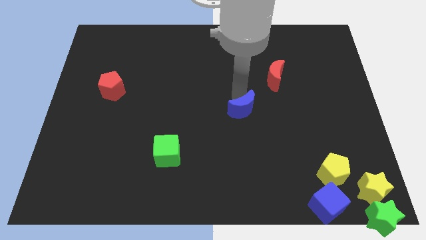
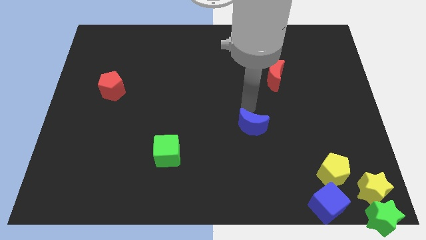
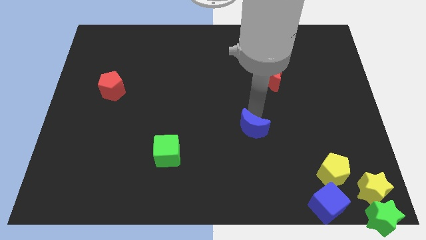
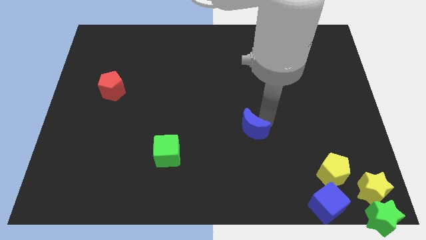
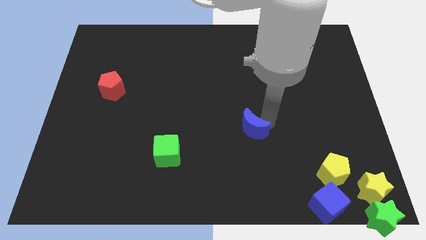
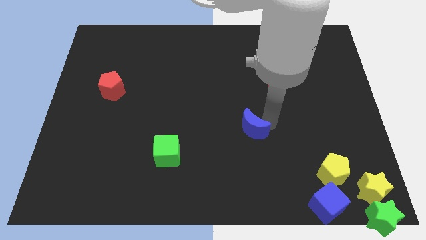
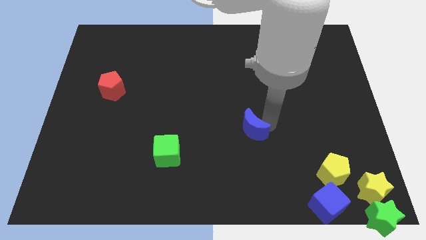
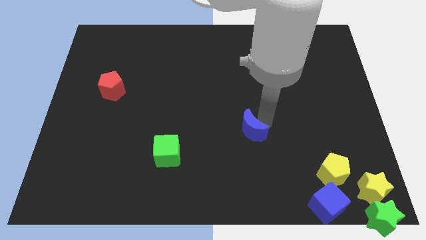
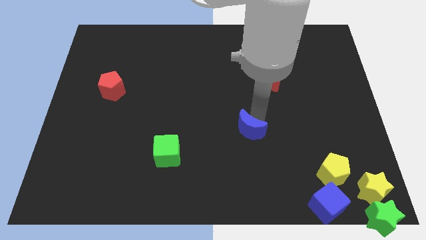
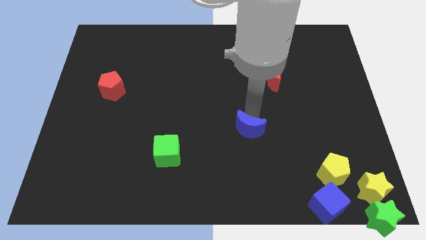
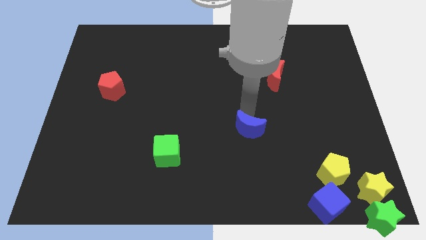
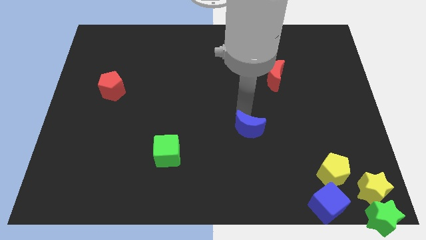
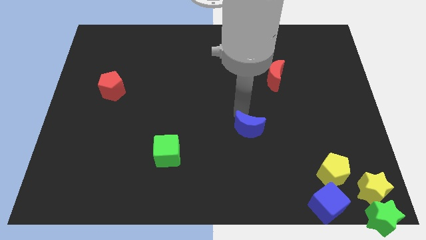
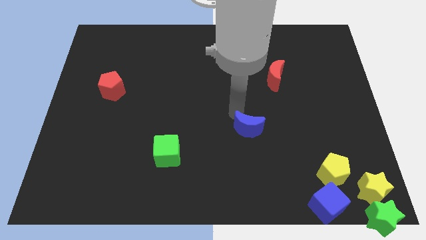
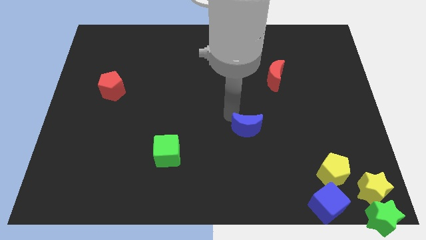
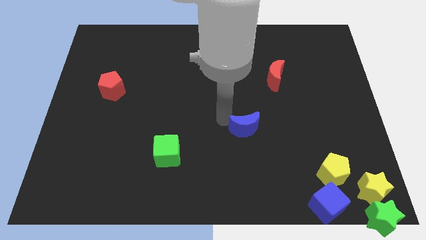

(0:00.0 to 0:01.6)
push blue crescent downwards

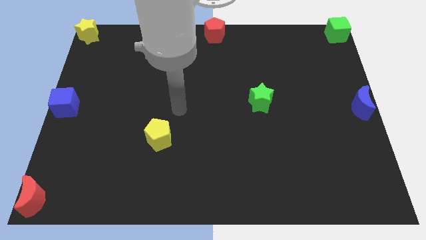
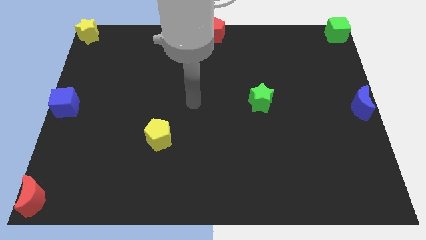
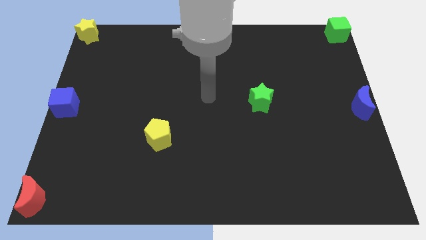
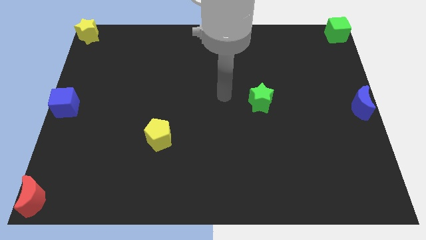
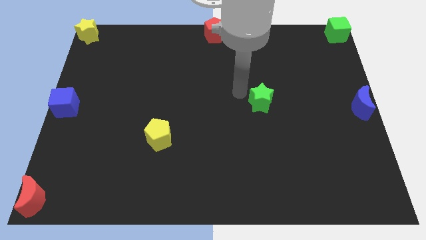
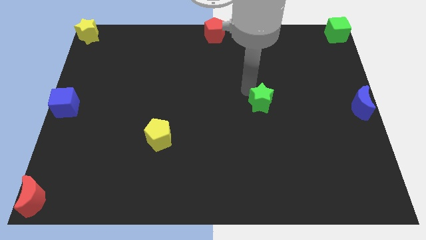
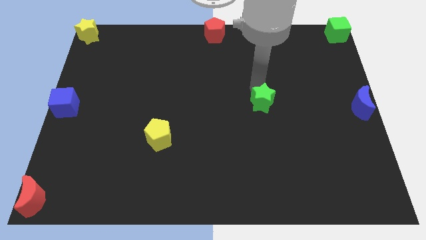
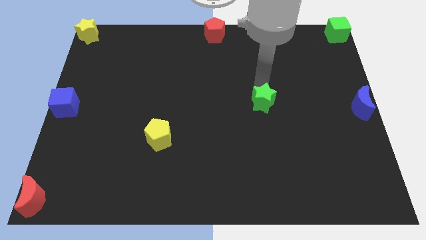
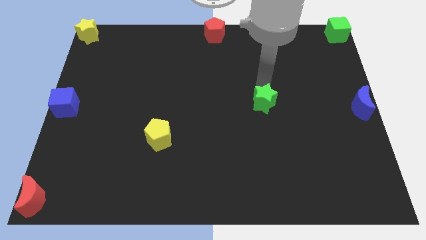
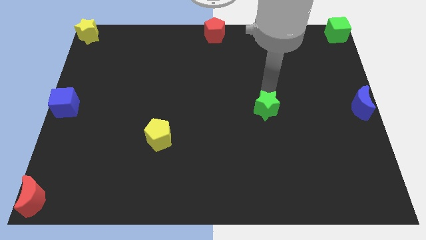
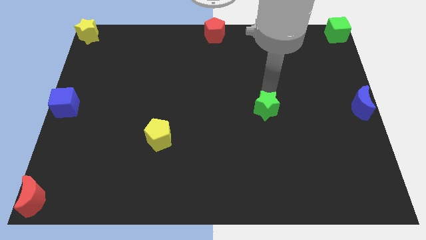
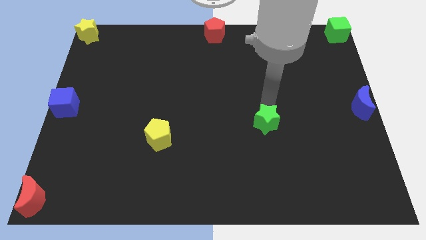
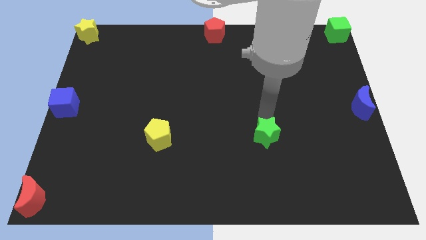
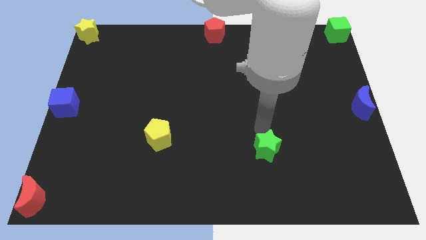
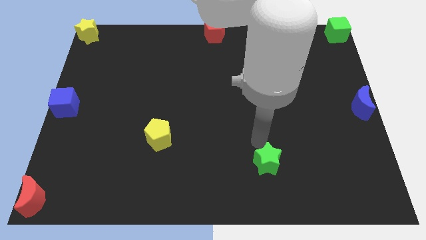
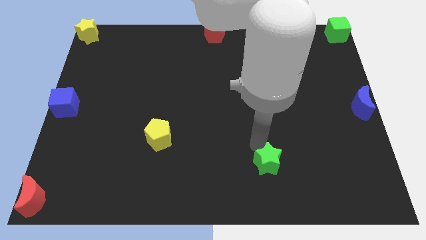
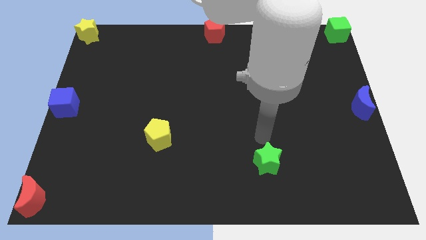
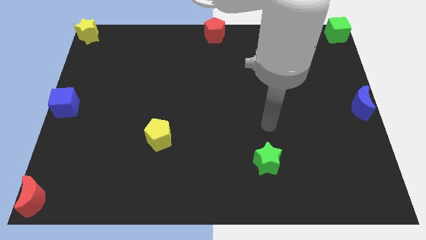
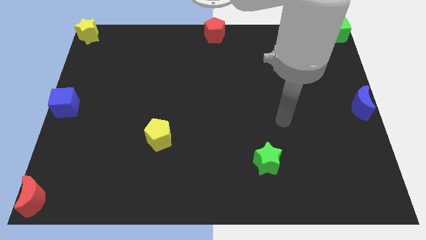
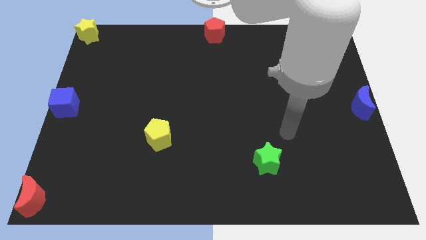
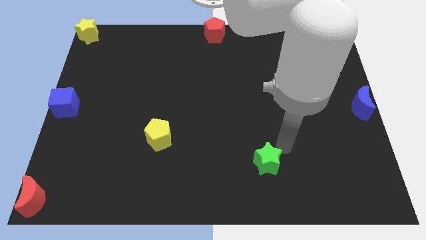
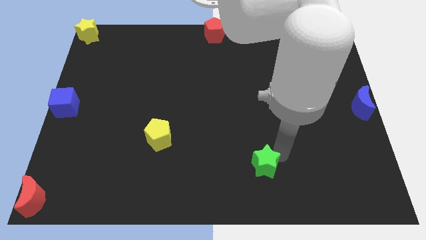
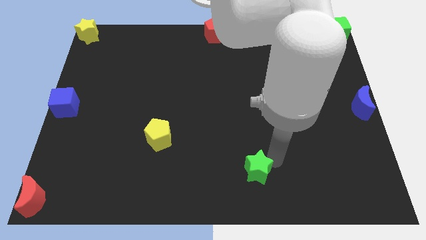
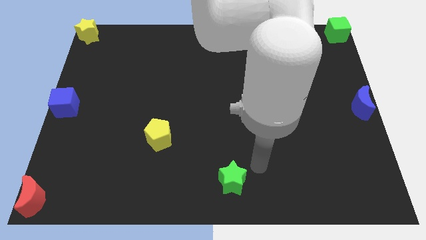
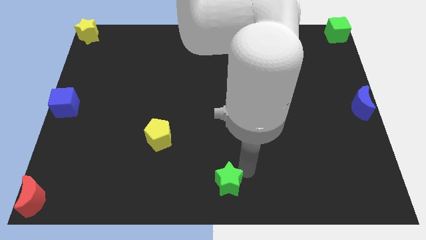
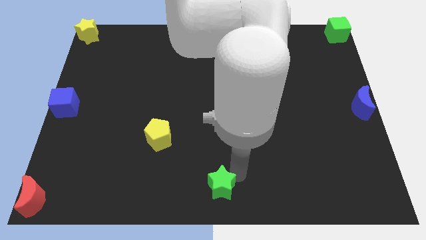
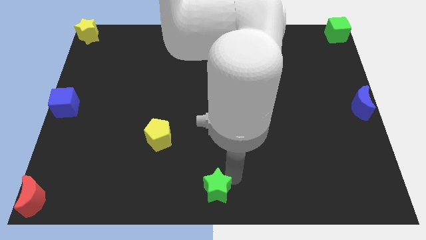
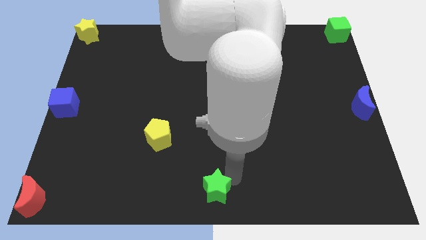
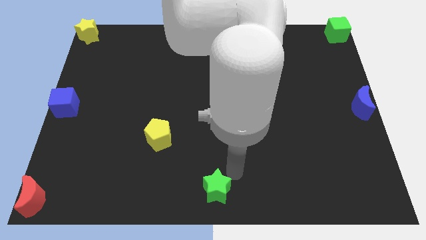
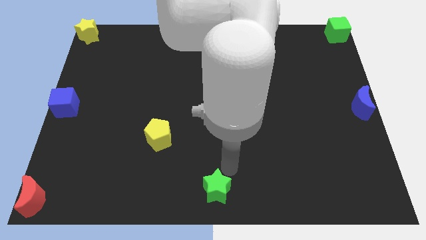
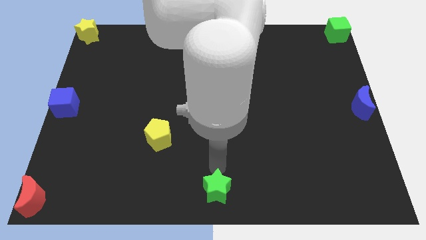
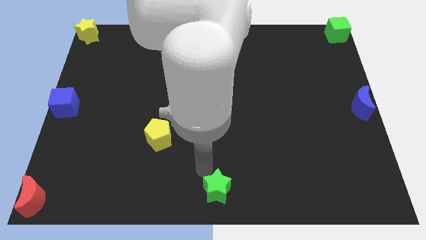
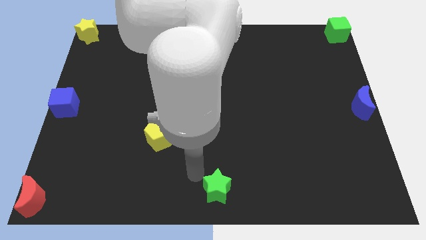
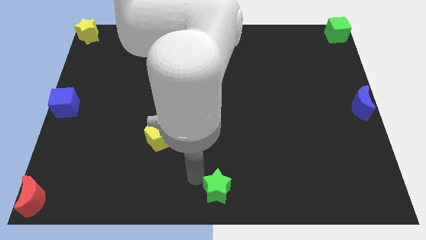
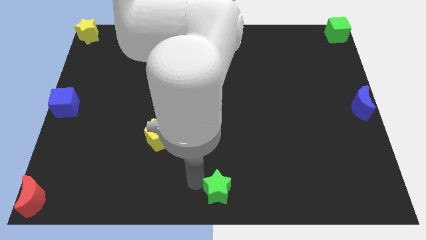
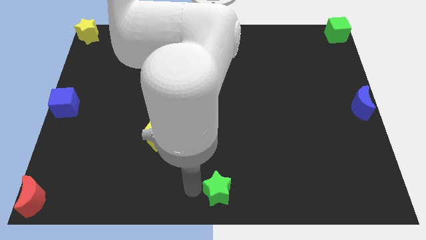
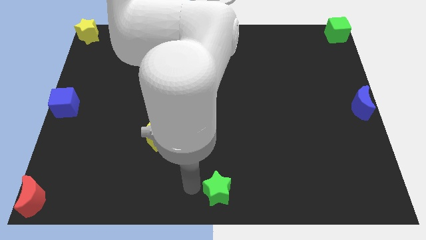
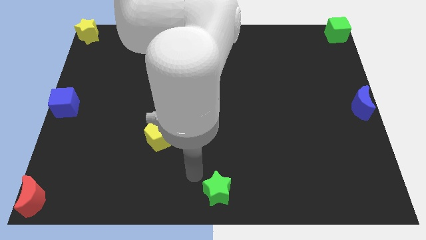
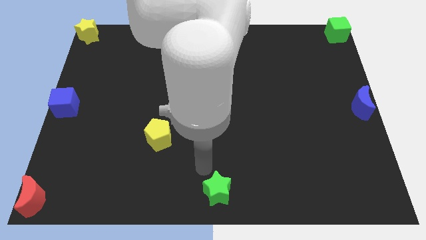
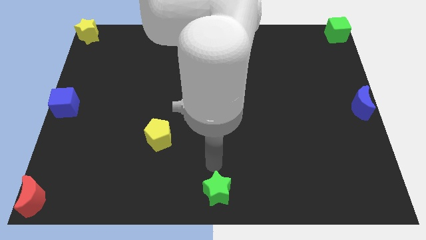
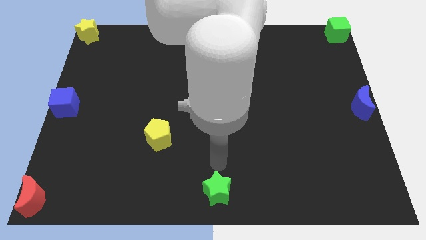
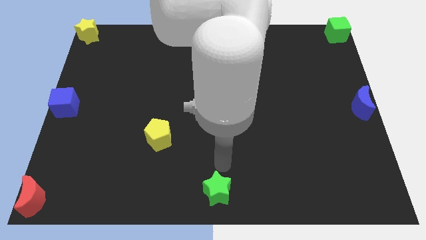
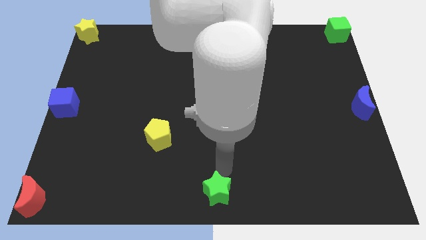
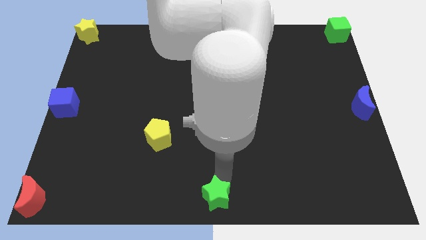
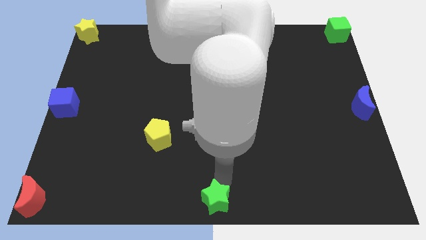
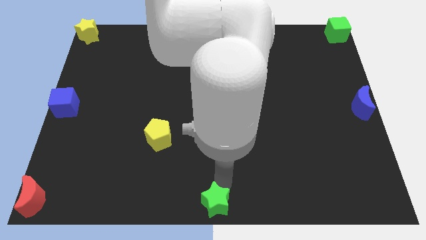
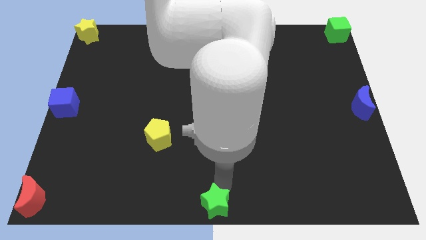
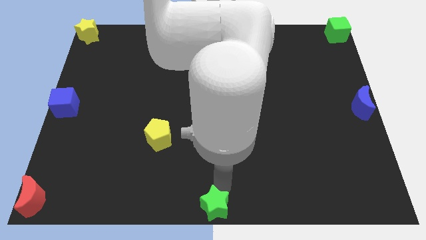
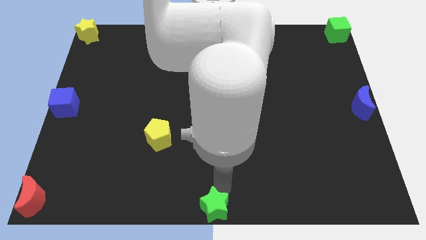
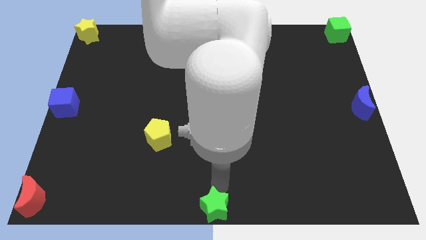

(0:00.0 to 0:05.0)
place green star to the center bottom

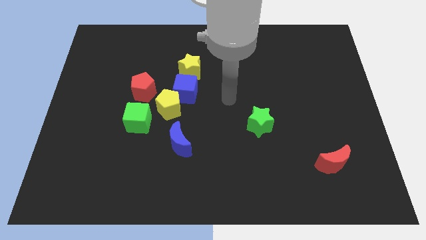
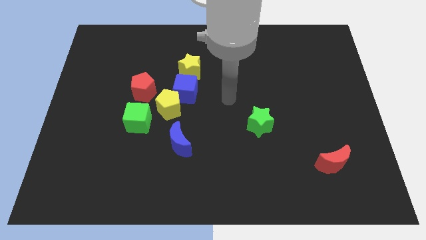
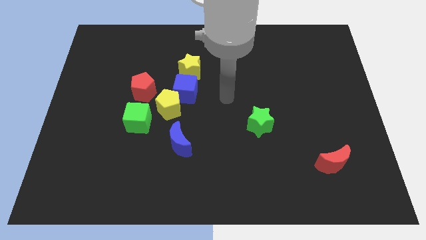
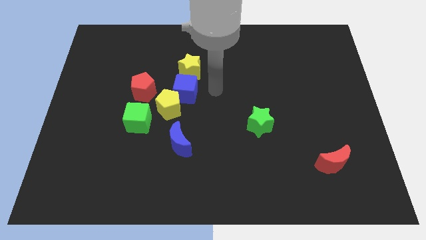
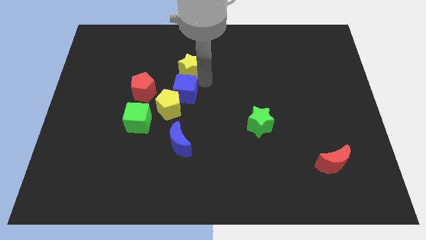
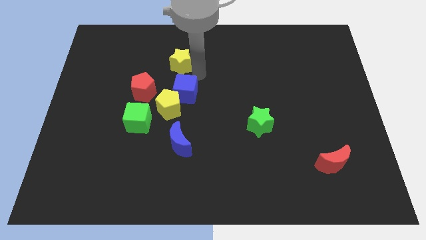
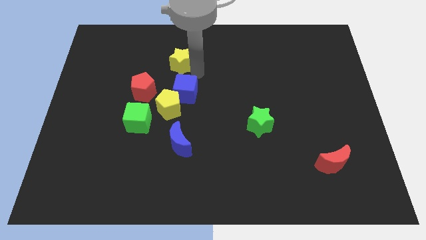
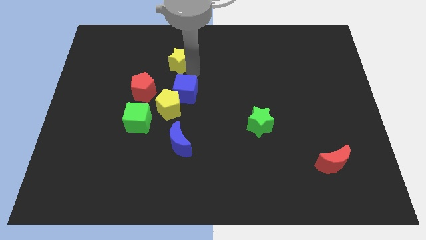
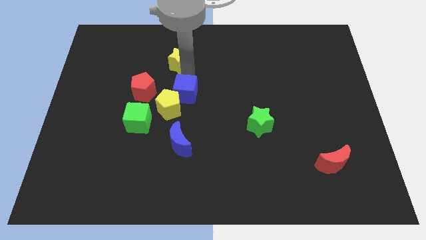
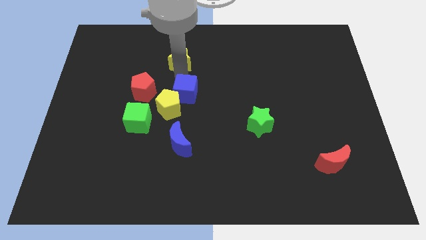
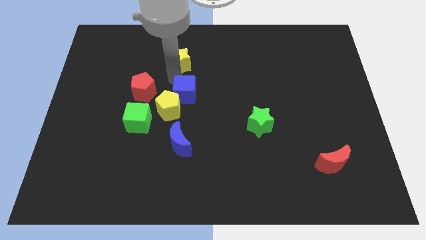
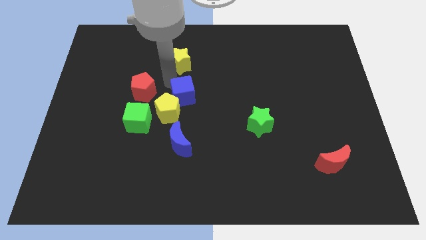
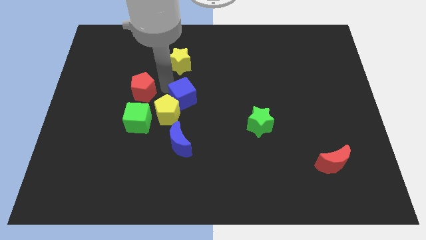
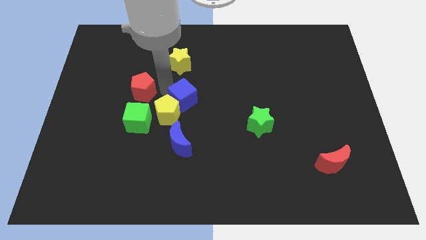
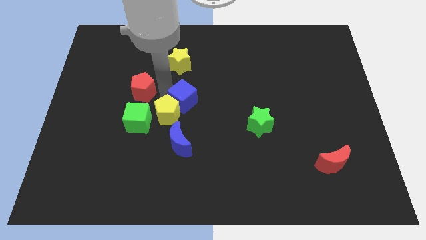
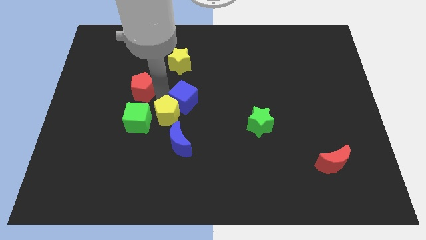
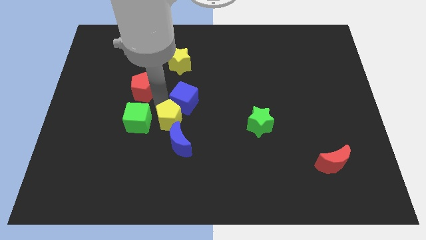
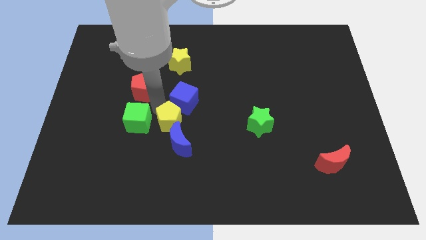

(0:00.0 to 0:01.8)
separate yellow star from the blue cube

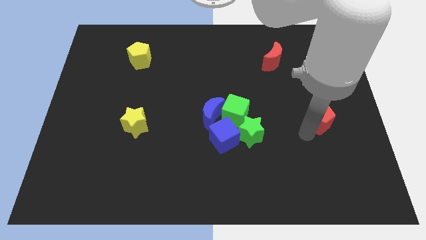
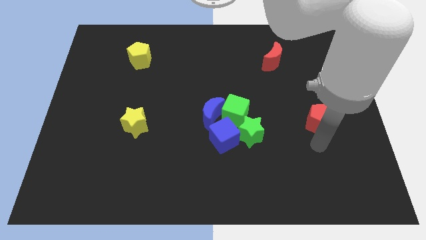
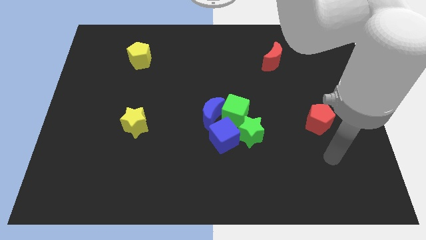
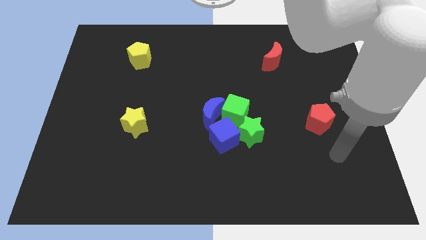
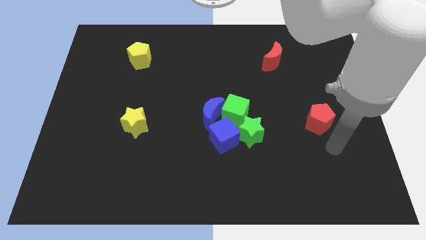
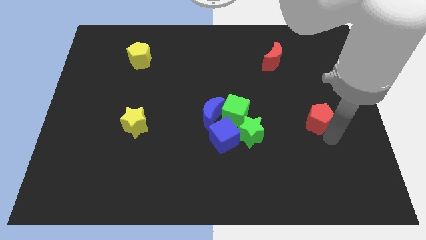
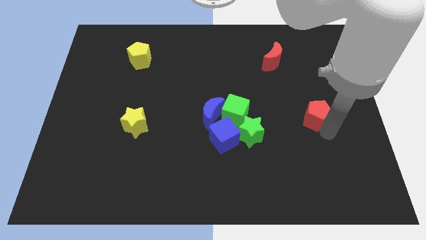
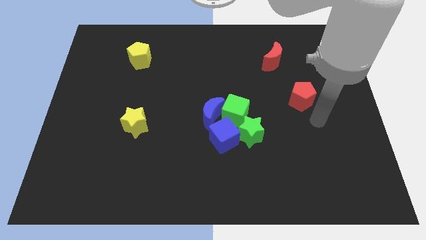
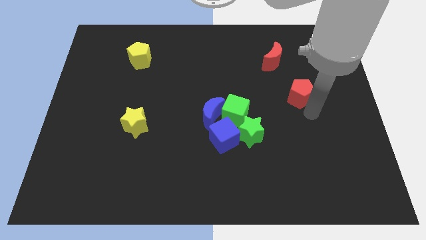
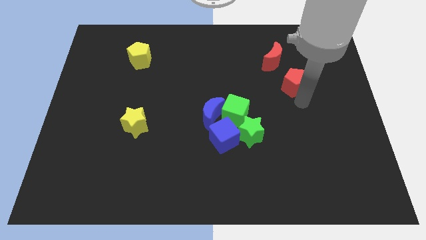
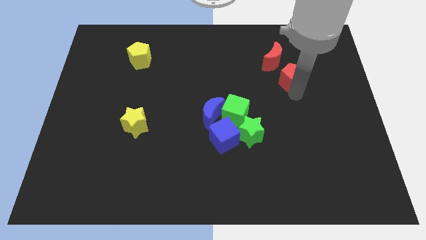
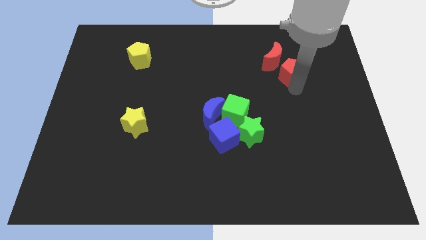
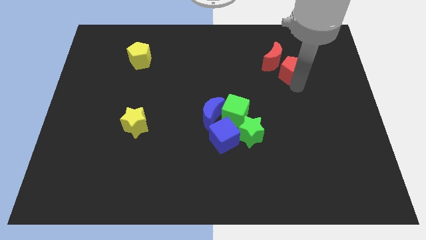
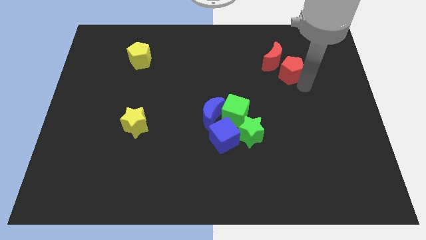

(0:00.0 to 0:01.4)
slightly move the red pentagon to the top side of the board
